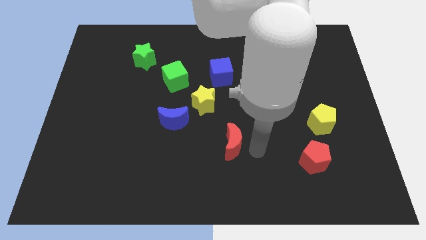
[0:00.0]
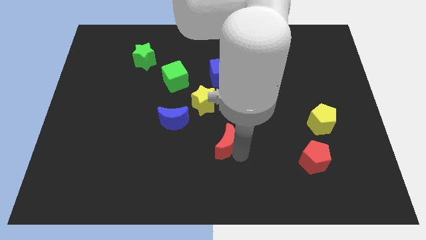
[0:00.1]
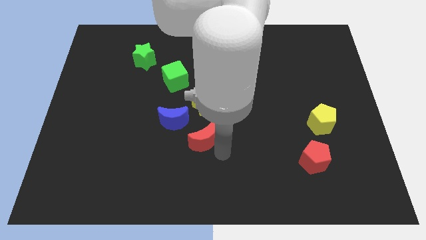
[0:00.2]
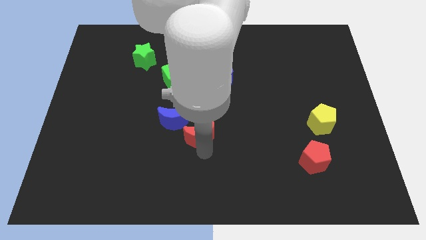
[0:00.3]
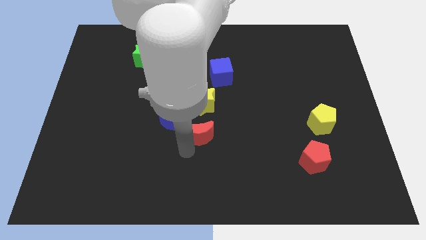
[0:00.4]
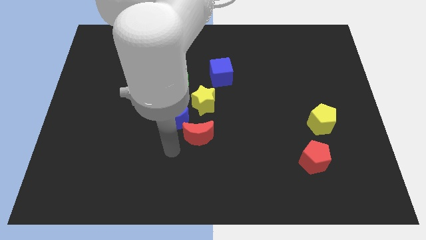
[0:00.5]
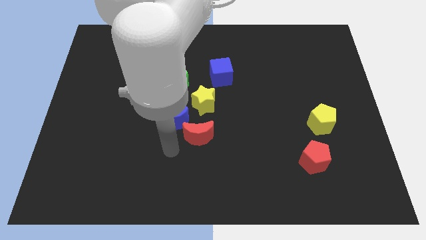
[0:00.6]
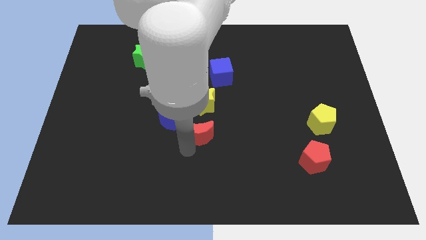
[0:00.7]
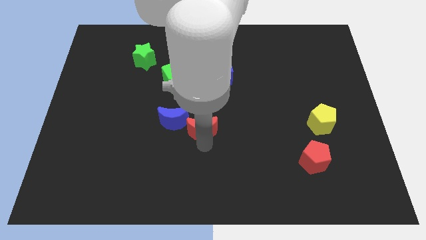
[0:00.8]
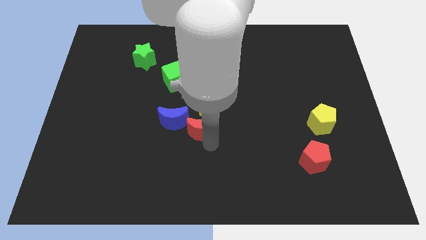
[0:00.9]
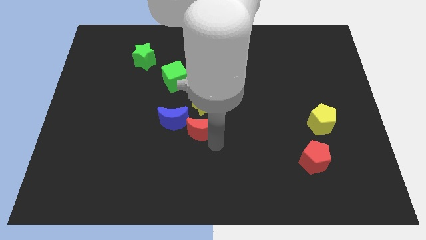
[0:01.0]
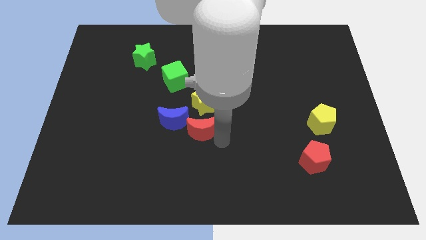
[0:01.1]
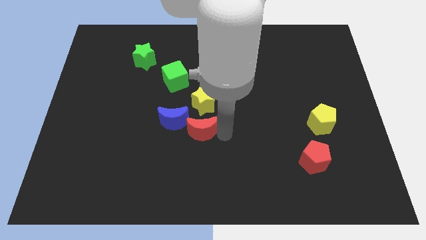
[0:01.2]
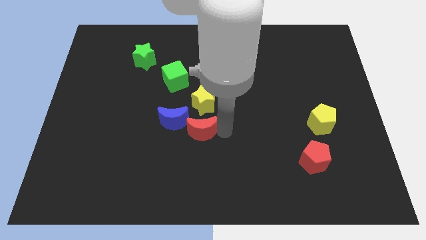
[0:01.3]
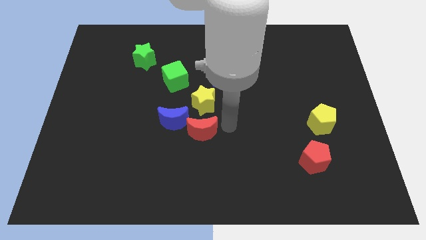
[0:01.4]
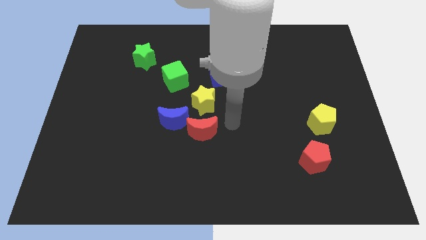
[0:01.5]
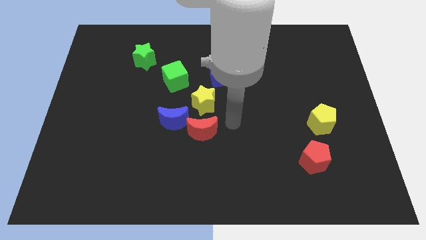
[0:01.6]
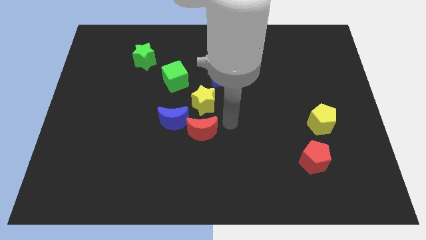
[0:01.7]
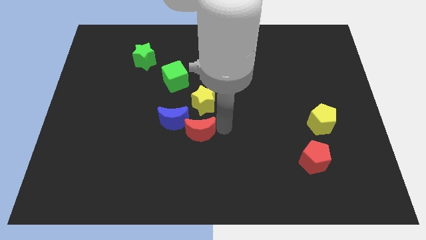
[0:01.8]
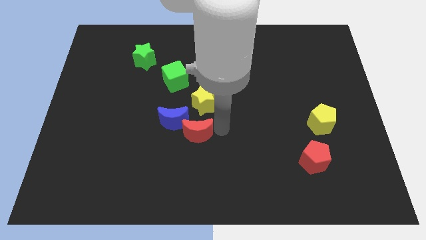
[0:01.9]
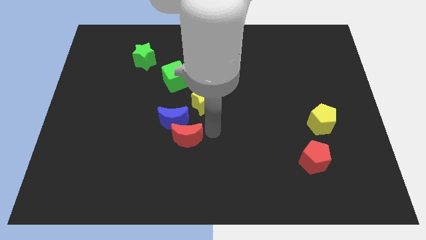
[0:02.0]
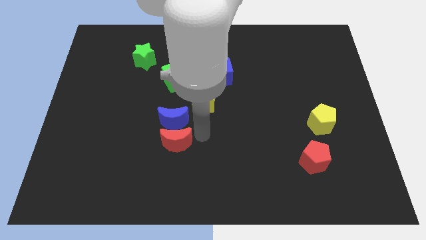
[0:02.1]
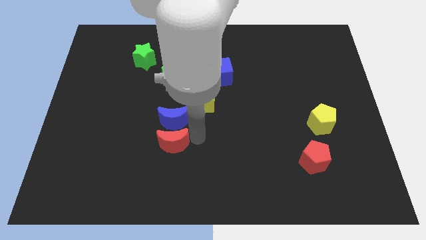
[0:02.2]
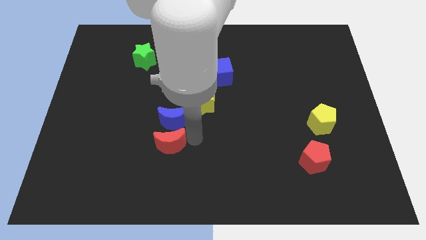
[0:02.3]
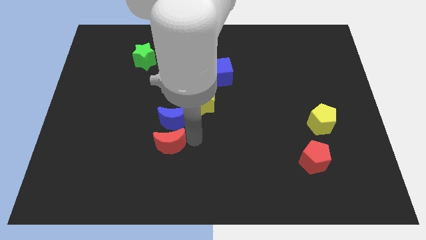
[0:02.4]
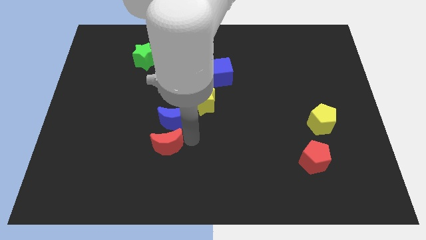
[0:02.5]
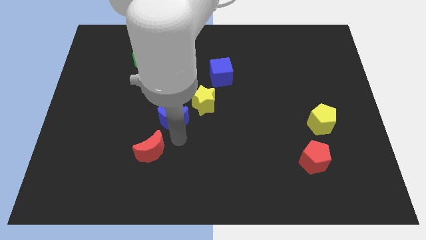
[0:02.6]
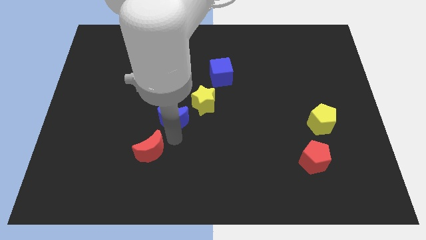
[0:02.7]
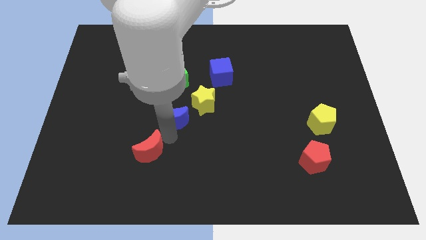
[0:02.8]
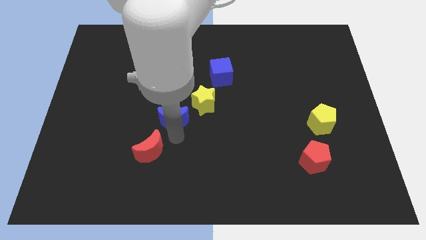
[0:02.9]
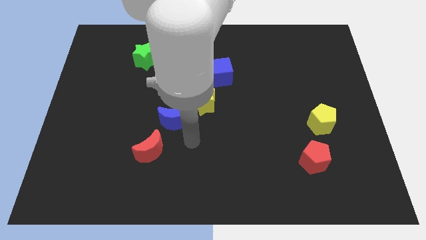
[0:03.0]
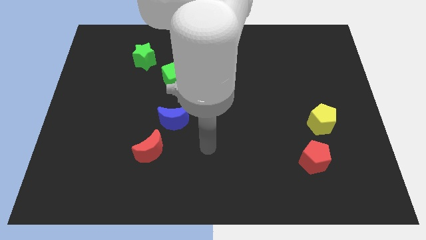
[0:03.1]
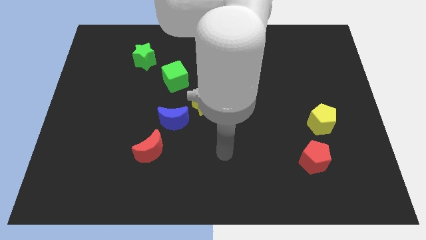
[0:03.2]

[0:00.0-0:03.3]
push the red crescent to the bottom left of the blue crescent

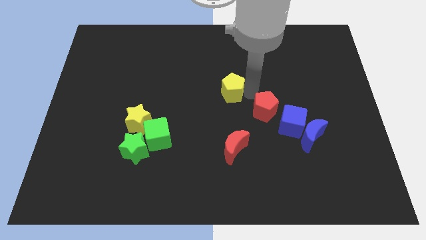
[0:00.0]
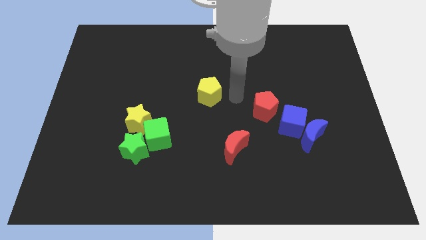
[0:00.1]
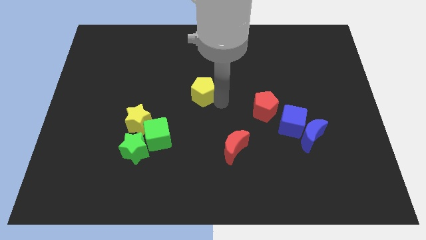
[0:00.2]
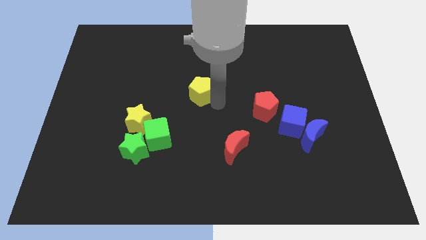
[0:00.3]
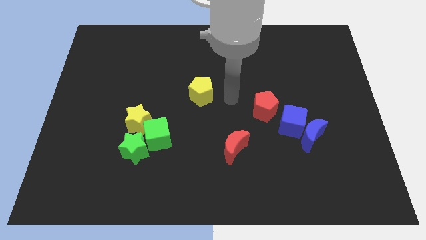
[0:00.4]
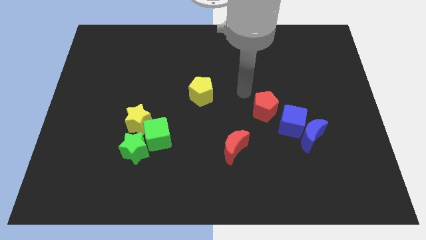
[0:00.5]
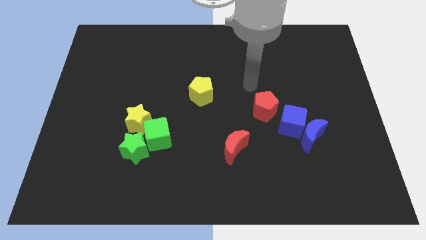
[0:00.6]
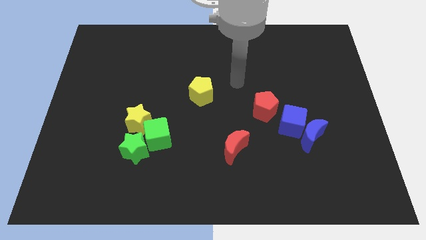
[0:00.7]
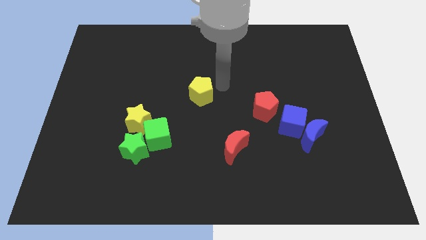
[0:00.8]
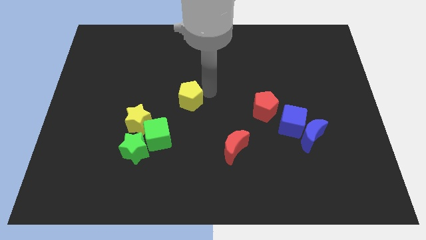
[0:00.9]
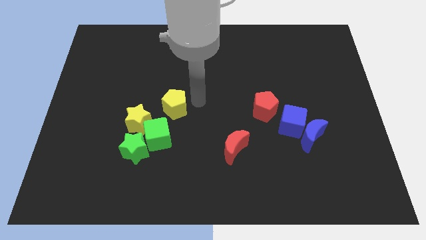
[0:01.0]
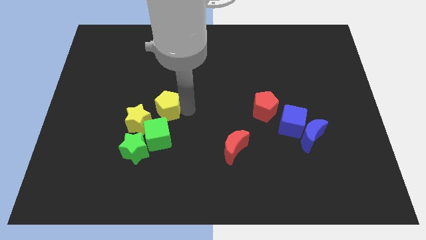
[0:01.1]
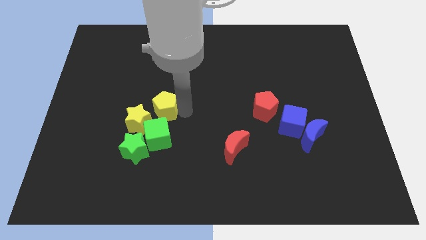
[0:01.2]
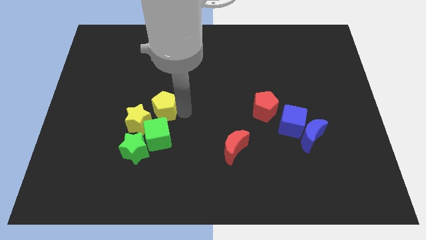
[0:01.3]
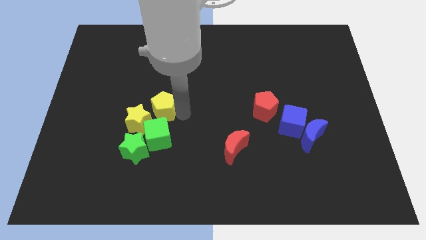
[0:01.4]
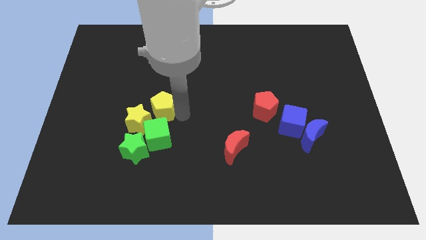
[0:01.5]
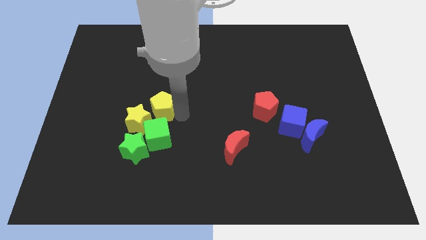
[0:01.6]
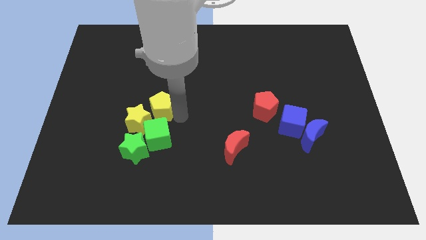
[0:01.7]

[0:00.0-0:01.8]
push the yellow pentagon into a group of blocks

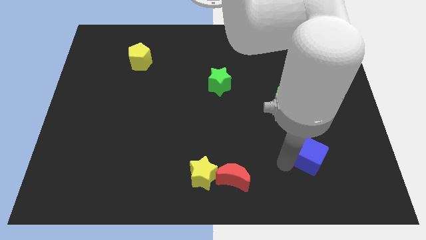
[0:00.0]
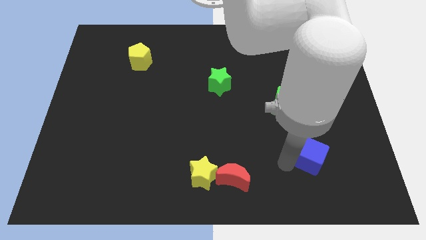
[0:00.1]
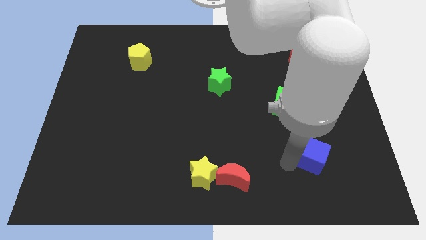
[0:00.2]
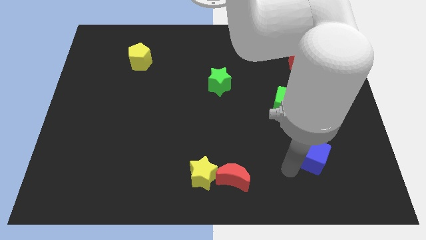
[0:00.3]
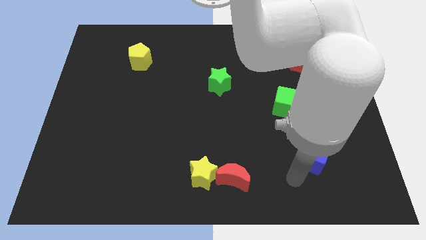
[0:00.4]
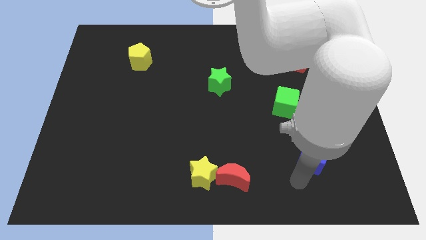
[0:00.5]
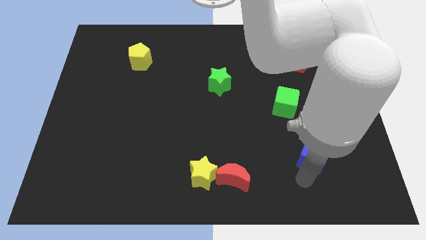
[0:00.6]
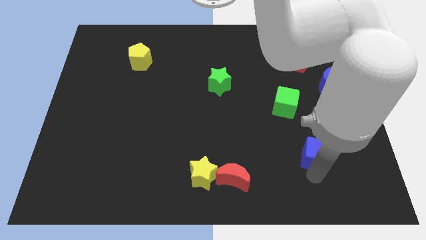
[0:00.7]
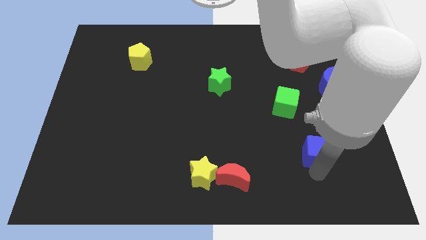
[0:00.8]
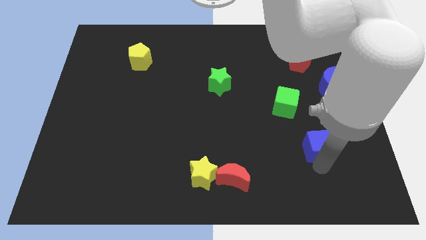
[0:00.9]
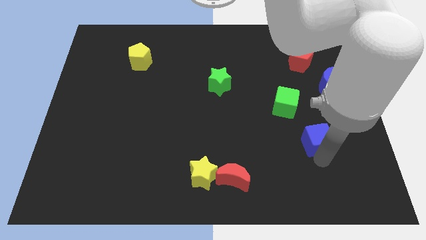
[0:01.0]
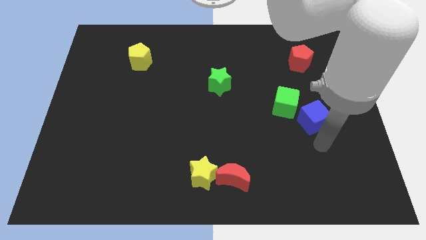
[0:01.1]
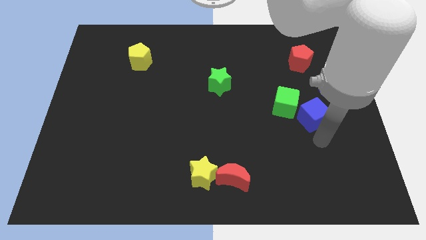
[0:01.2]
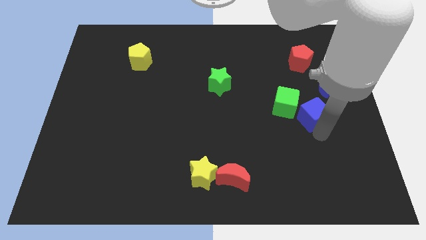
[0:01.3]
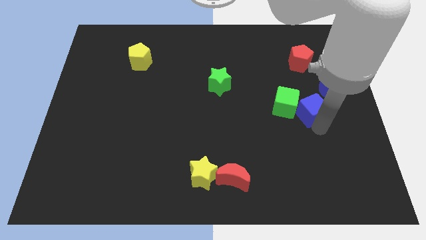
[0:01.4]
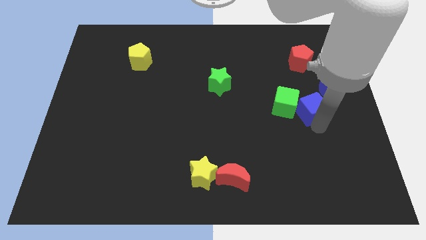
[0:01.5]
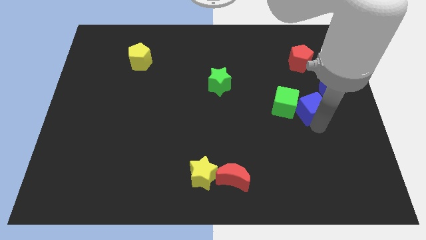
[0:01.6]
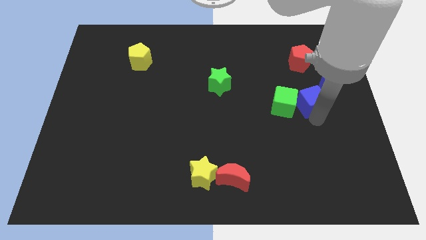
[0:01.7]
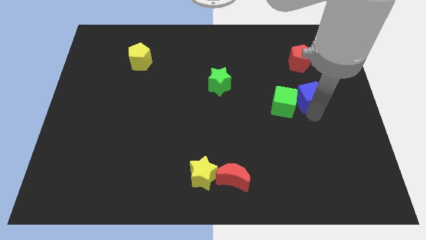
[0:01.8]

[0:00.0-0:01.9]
put the blue cube right to the green cube

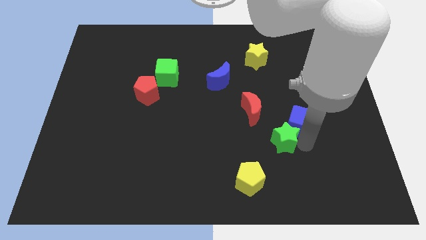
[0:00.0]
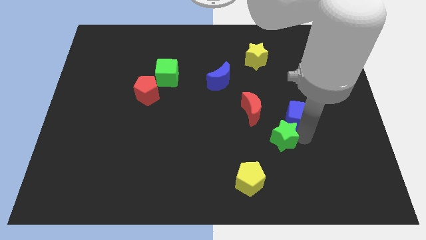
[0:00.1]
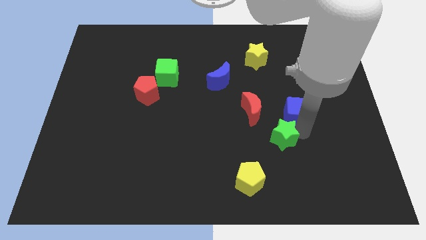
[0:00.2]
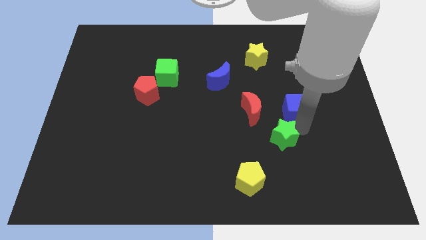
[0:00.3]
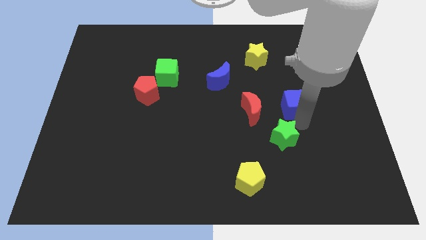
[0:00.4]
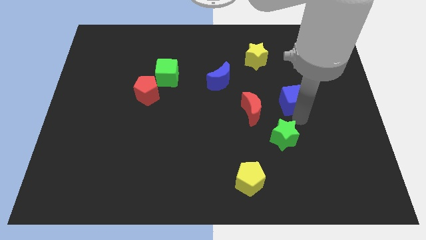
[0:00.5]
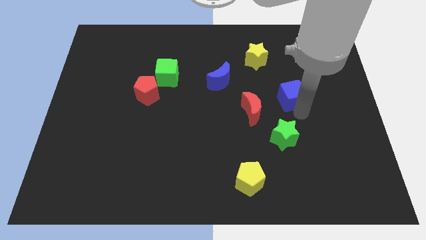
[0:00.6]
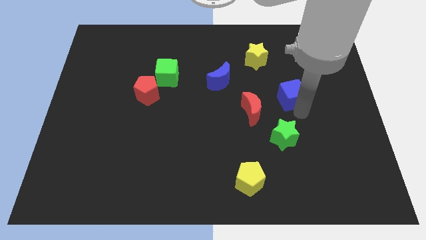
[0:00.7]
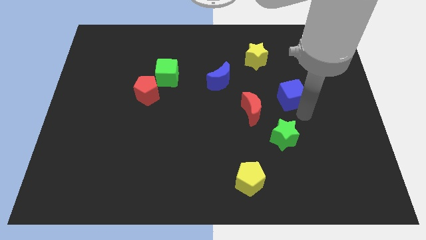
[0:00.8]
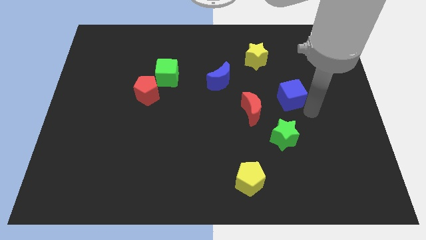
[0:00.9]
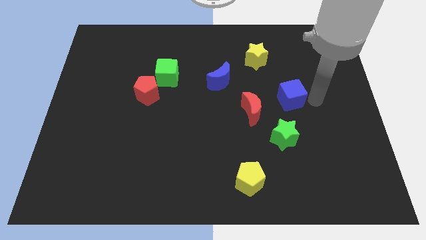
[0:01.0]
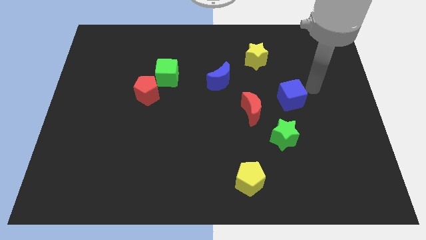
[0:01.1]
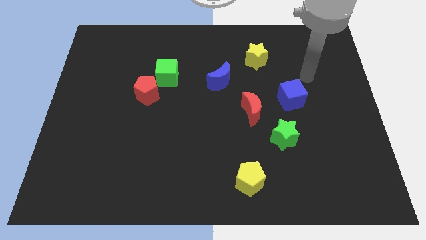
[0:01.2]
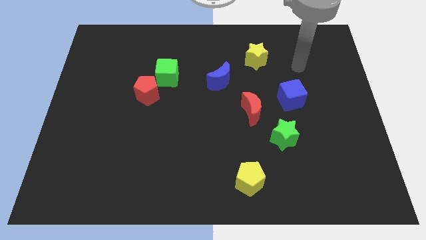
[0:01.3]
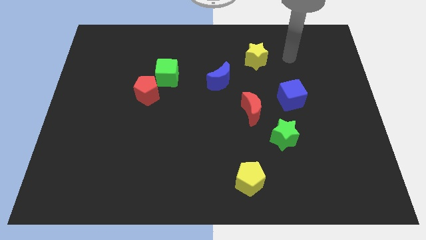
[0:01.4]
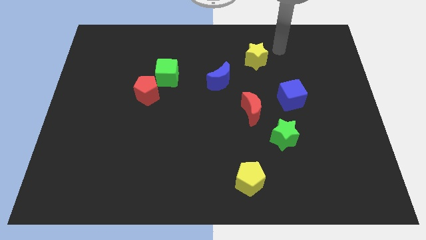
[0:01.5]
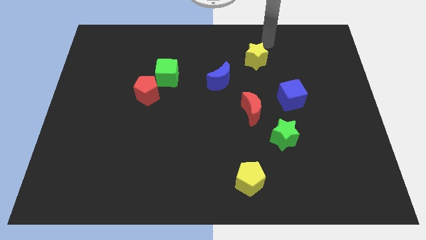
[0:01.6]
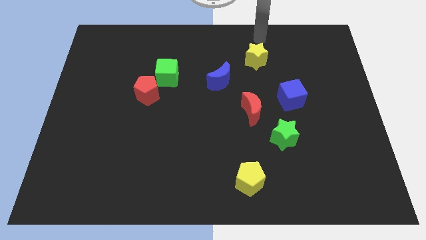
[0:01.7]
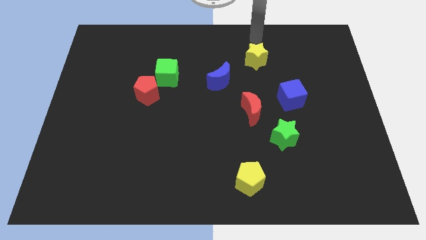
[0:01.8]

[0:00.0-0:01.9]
seprate green star and blue cube

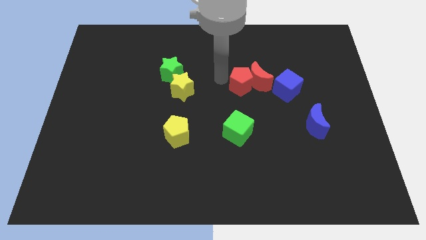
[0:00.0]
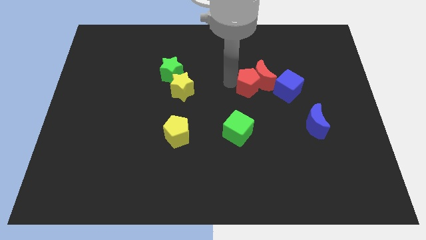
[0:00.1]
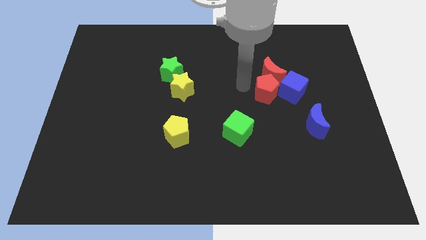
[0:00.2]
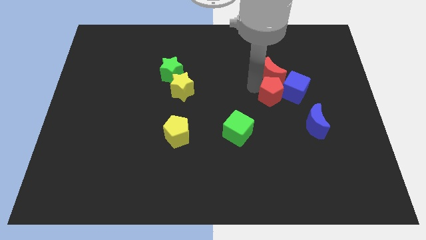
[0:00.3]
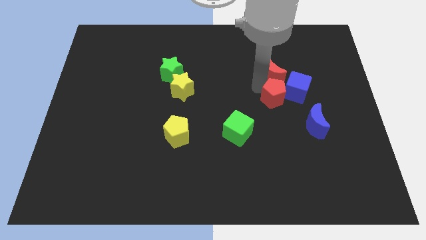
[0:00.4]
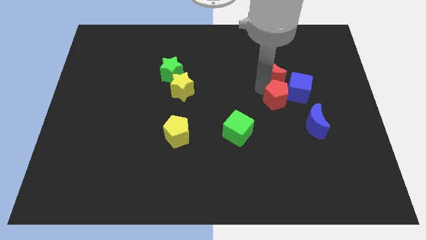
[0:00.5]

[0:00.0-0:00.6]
place red pentagon diagonally above the green cube
